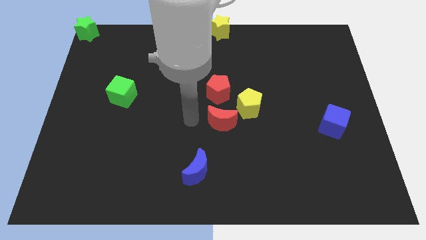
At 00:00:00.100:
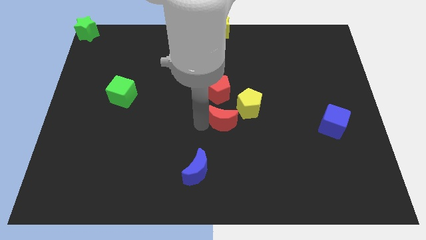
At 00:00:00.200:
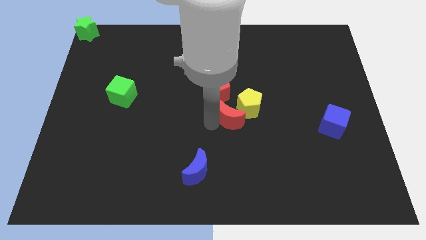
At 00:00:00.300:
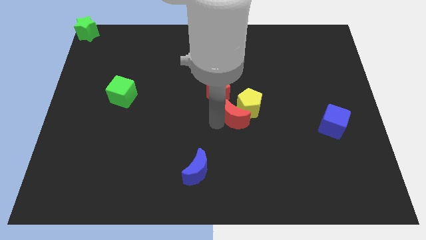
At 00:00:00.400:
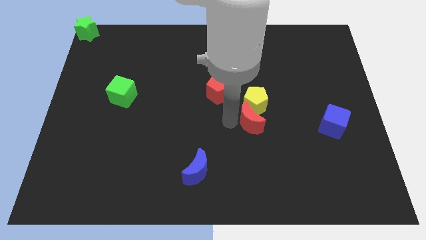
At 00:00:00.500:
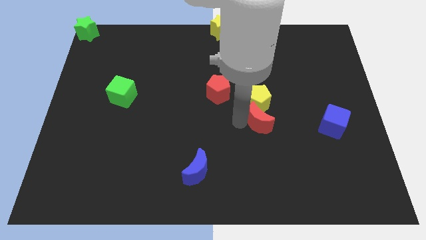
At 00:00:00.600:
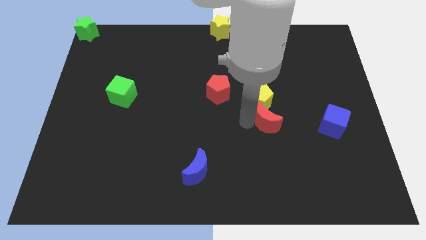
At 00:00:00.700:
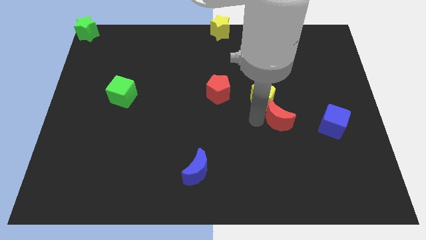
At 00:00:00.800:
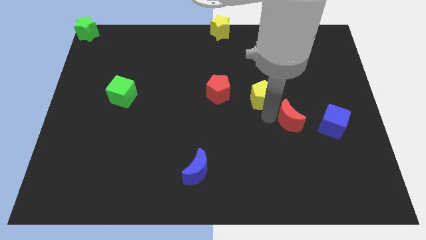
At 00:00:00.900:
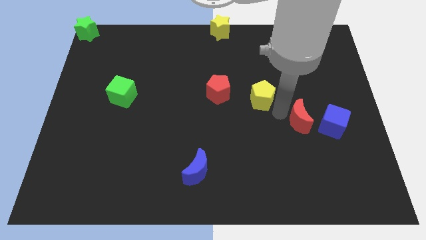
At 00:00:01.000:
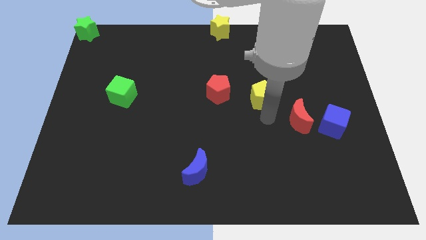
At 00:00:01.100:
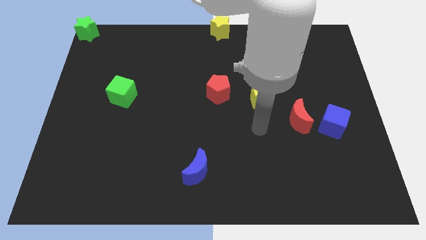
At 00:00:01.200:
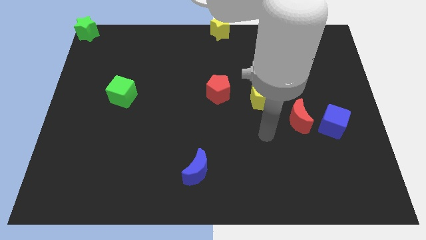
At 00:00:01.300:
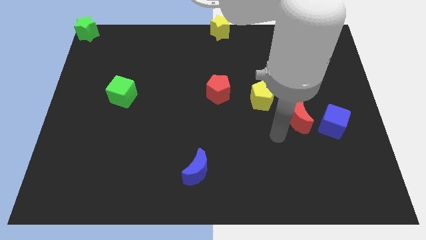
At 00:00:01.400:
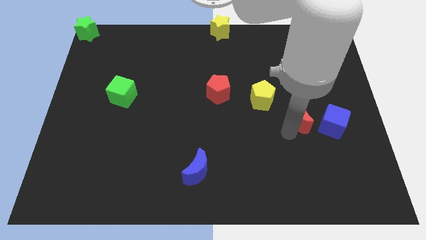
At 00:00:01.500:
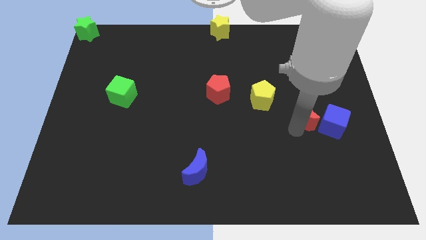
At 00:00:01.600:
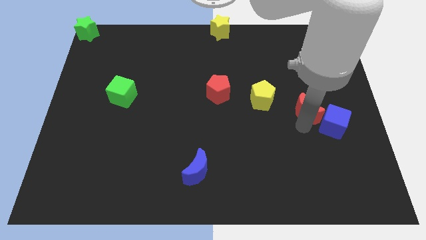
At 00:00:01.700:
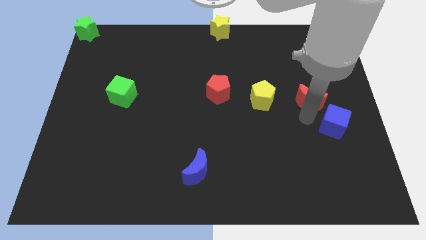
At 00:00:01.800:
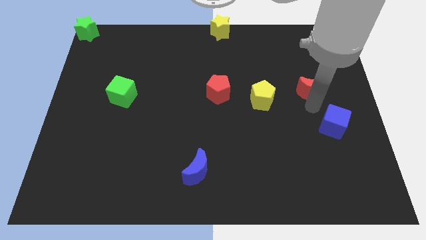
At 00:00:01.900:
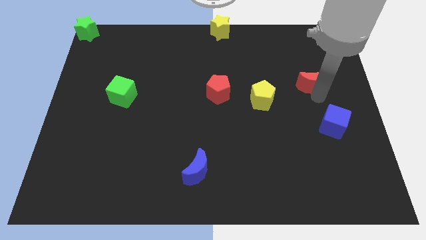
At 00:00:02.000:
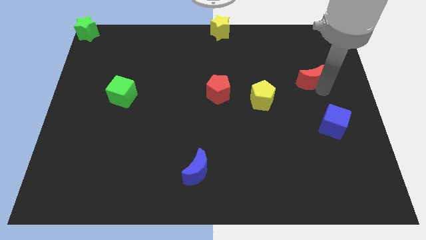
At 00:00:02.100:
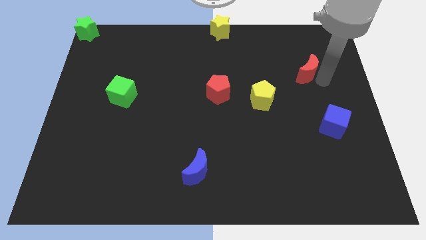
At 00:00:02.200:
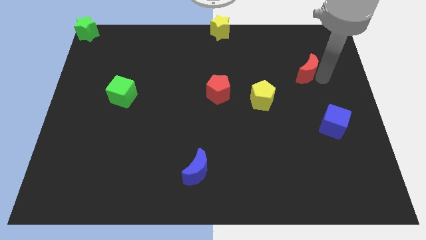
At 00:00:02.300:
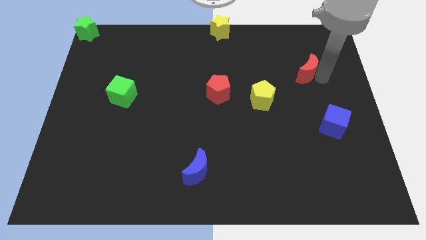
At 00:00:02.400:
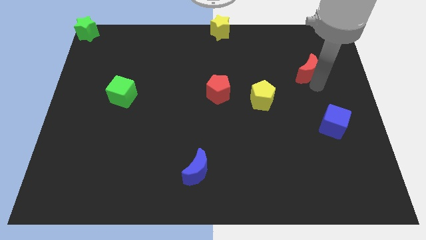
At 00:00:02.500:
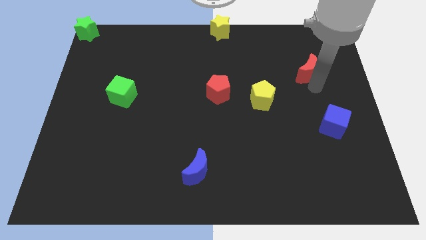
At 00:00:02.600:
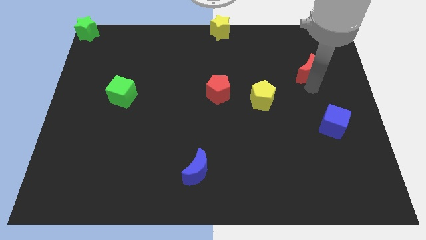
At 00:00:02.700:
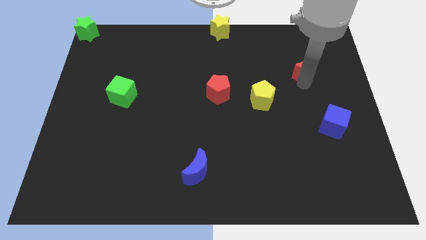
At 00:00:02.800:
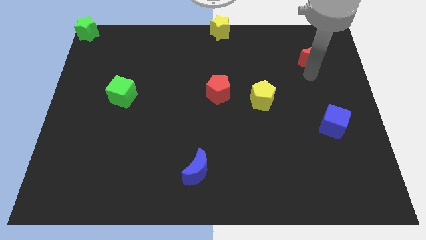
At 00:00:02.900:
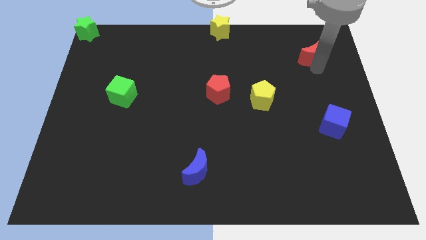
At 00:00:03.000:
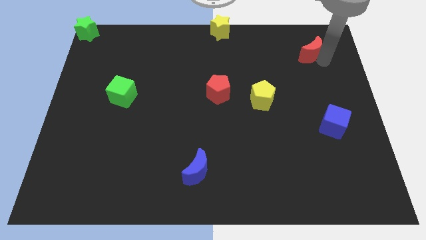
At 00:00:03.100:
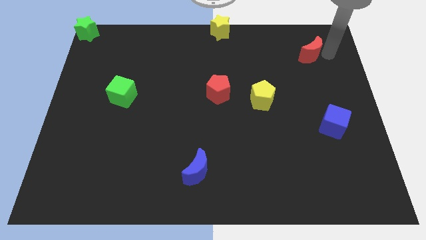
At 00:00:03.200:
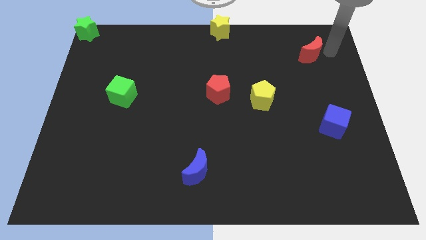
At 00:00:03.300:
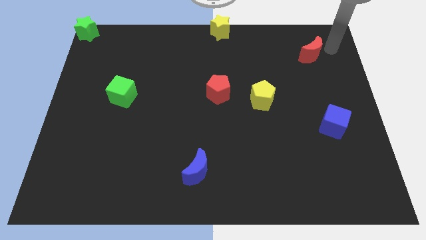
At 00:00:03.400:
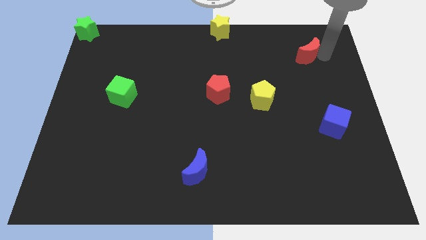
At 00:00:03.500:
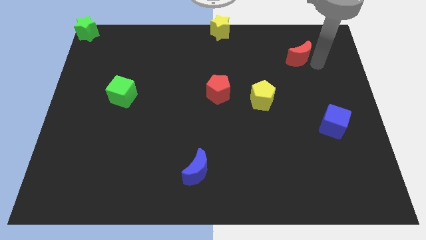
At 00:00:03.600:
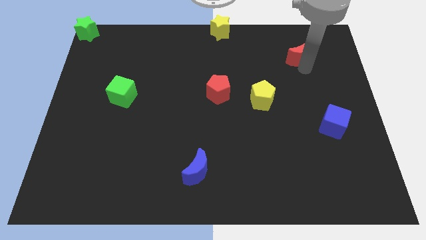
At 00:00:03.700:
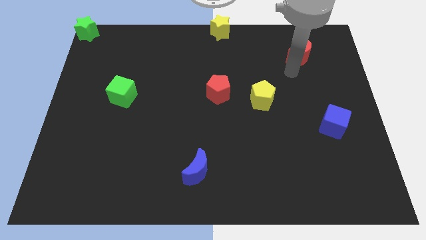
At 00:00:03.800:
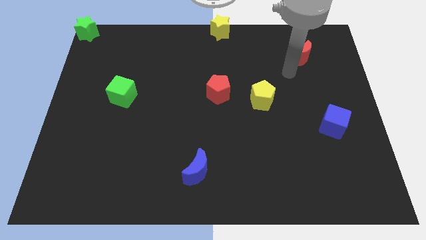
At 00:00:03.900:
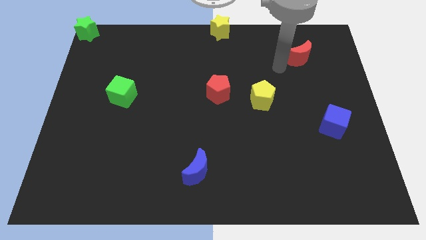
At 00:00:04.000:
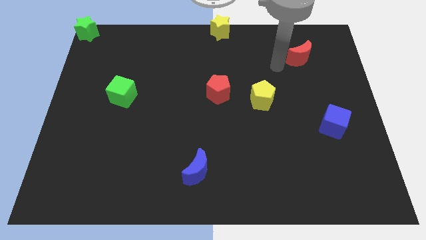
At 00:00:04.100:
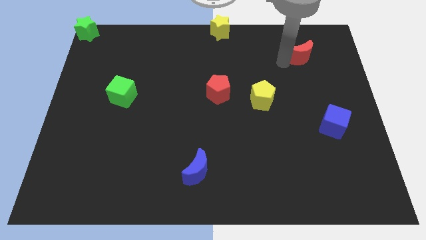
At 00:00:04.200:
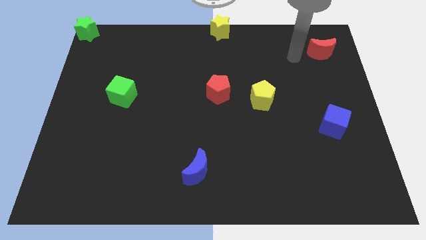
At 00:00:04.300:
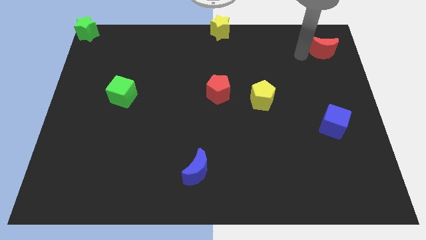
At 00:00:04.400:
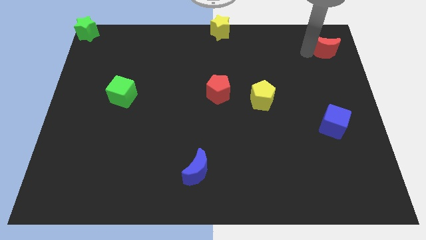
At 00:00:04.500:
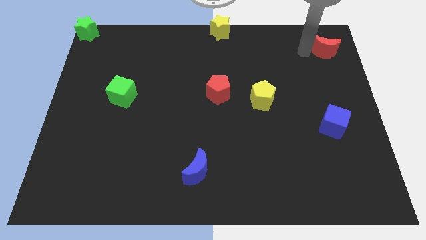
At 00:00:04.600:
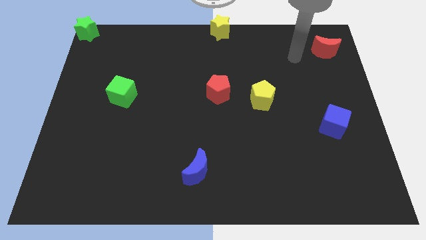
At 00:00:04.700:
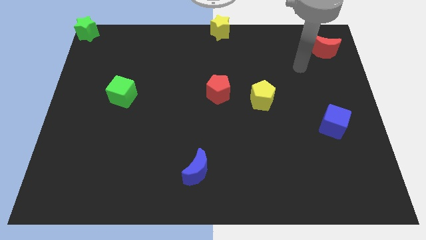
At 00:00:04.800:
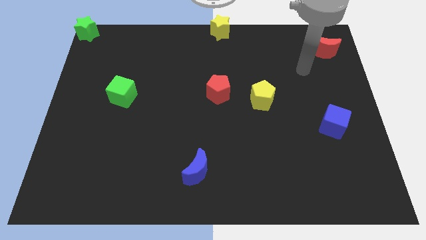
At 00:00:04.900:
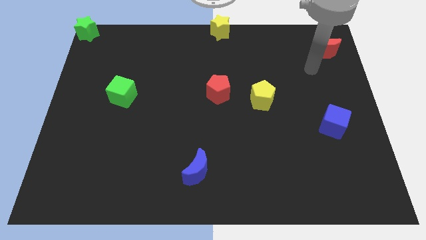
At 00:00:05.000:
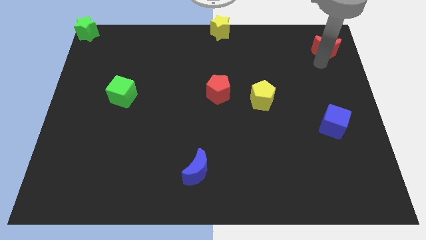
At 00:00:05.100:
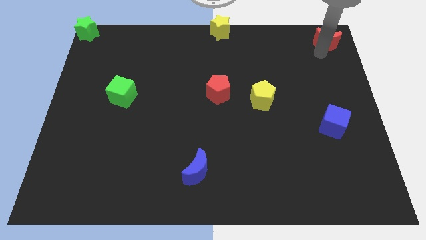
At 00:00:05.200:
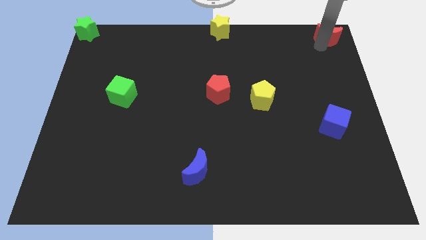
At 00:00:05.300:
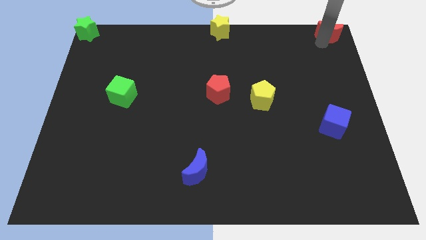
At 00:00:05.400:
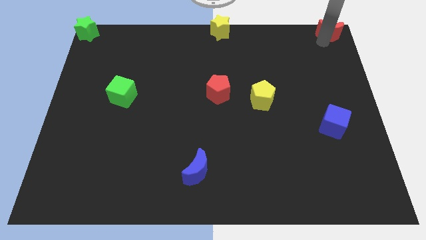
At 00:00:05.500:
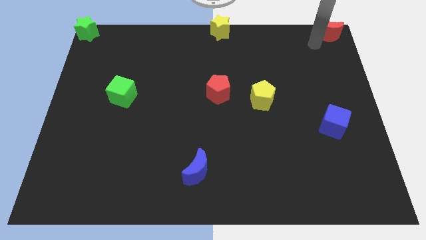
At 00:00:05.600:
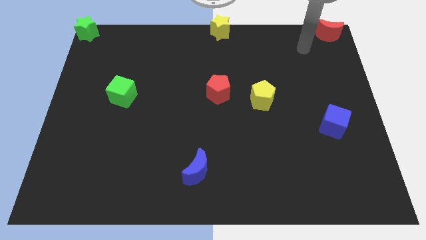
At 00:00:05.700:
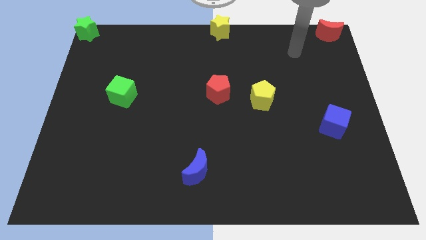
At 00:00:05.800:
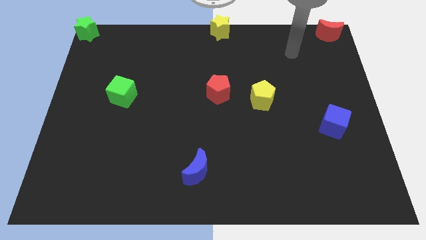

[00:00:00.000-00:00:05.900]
place red moon to the top right corner of the board

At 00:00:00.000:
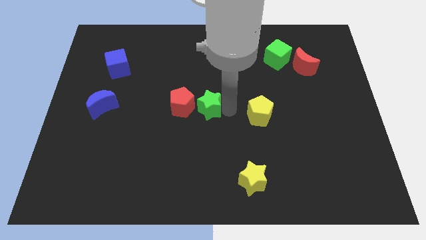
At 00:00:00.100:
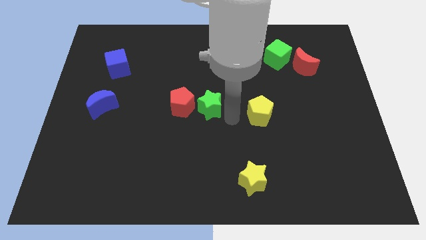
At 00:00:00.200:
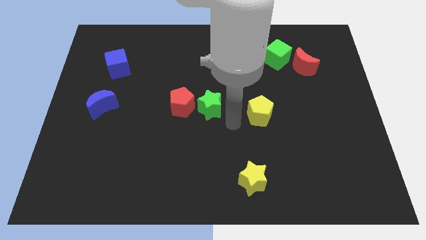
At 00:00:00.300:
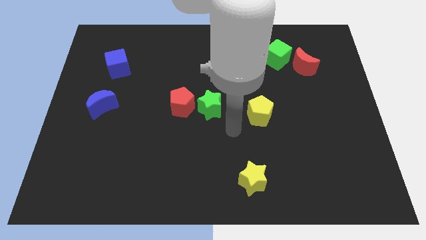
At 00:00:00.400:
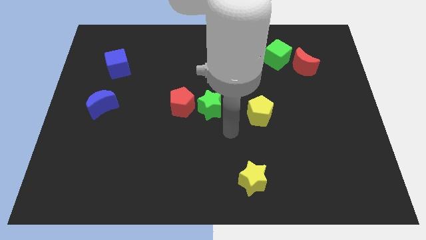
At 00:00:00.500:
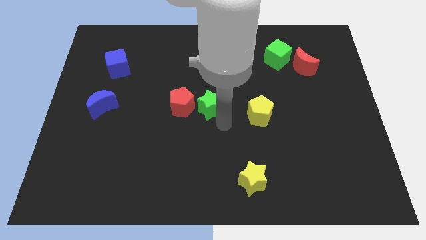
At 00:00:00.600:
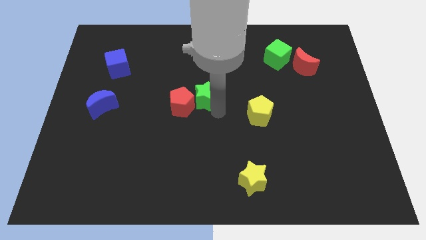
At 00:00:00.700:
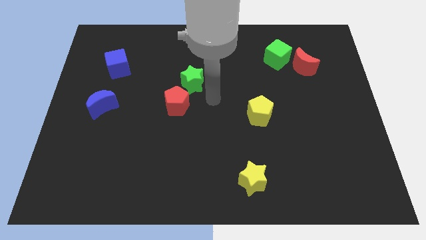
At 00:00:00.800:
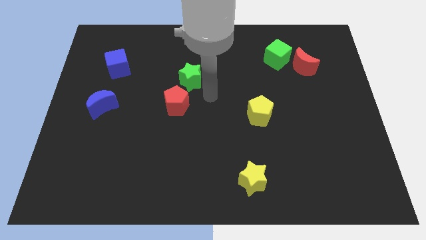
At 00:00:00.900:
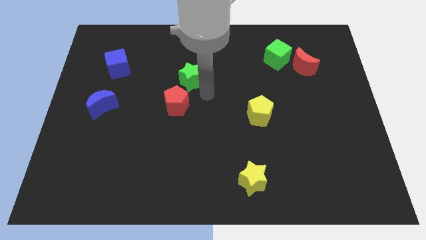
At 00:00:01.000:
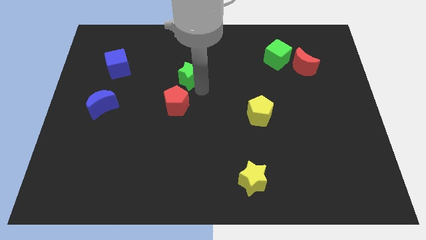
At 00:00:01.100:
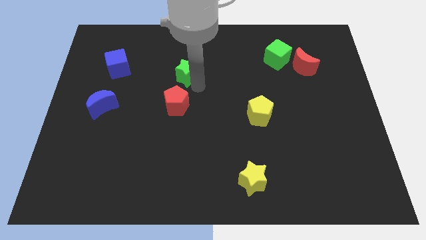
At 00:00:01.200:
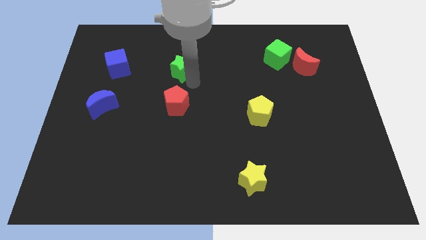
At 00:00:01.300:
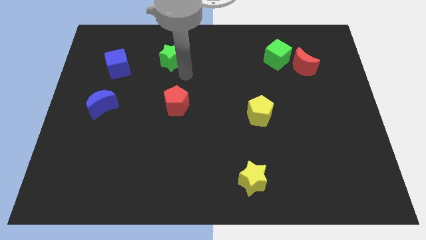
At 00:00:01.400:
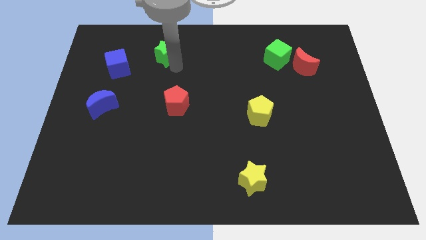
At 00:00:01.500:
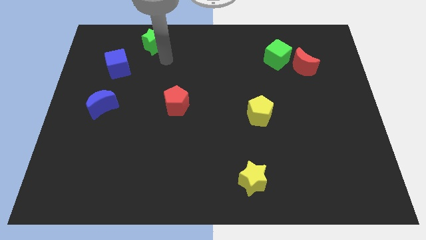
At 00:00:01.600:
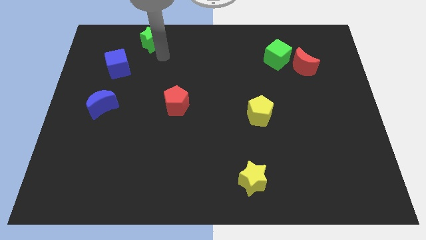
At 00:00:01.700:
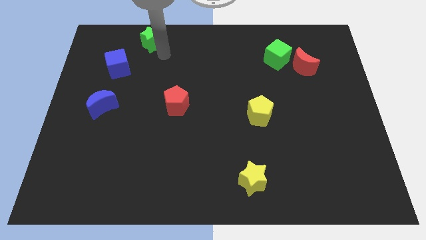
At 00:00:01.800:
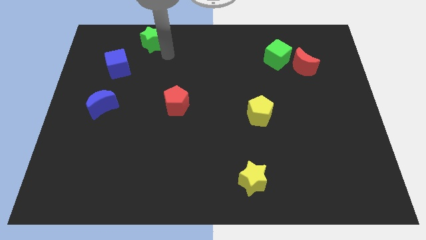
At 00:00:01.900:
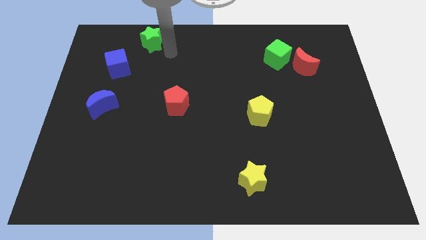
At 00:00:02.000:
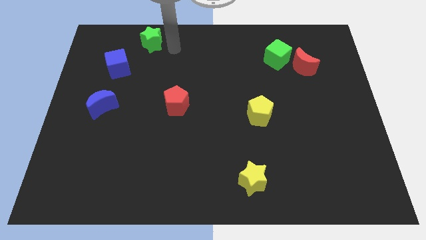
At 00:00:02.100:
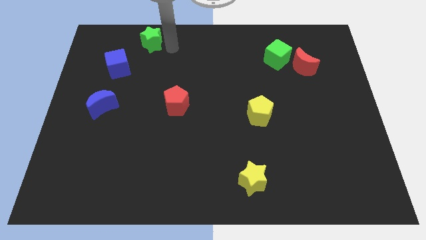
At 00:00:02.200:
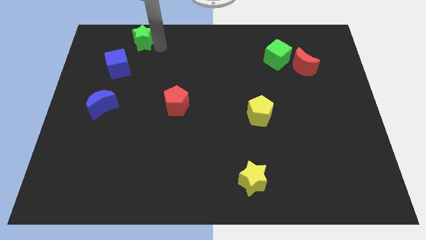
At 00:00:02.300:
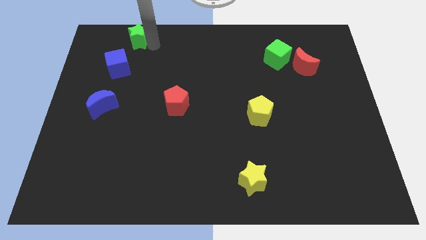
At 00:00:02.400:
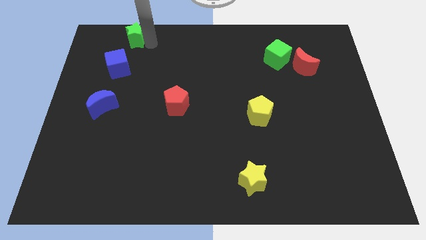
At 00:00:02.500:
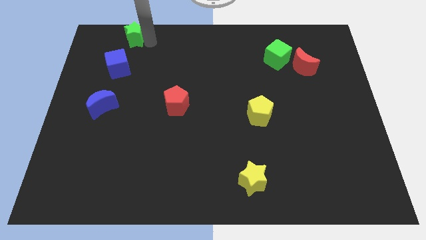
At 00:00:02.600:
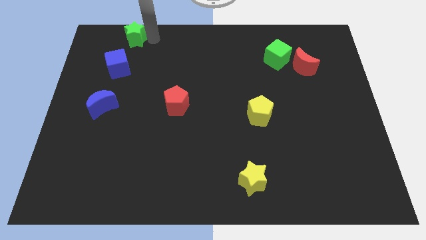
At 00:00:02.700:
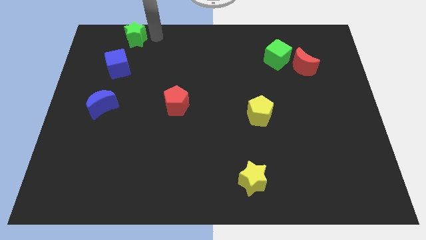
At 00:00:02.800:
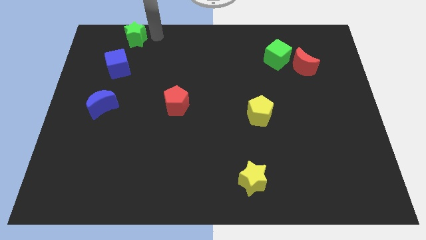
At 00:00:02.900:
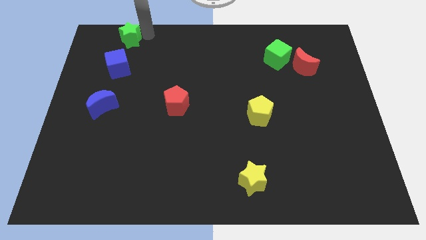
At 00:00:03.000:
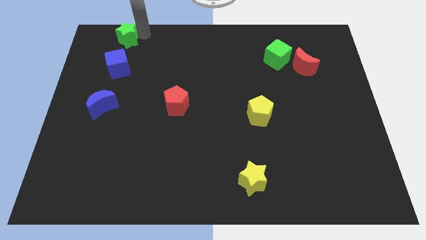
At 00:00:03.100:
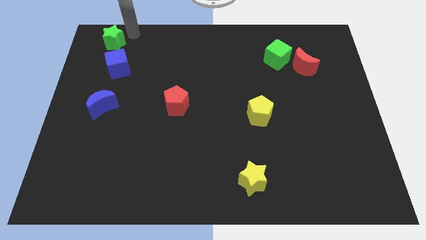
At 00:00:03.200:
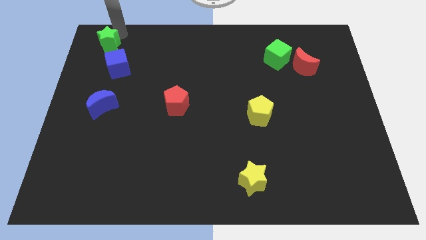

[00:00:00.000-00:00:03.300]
push green star above blue cube
